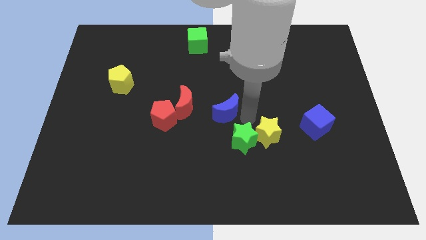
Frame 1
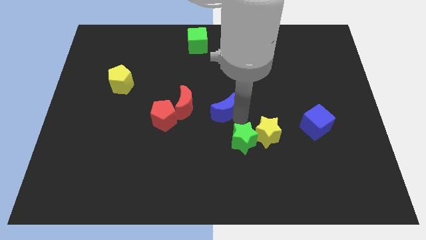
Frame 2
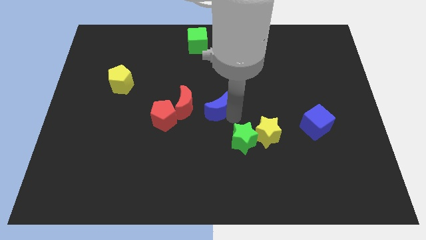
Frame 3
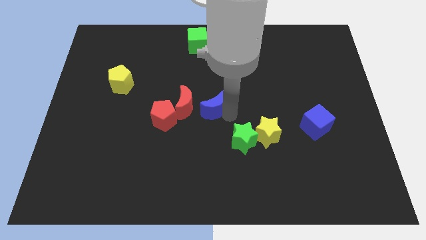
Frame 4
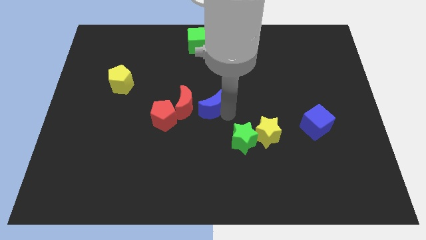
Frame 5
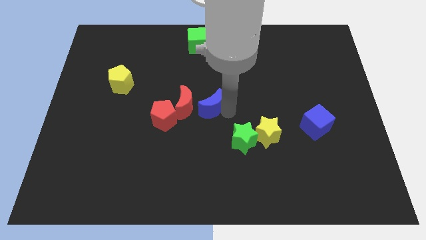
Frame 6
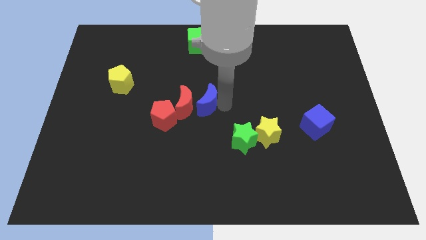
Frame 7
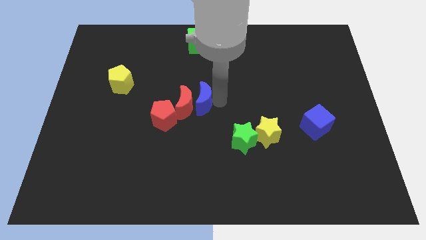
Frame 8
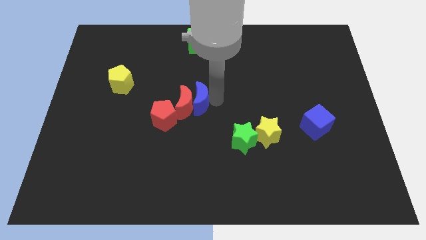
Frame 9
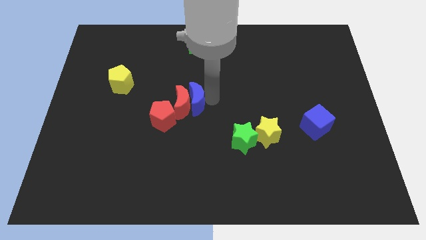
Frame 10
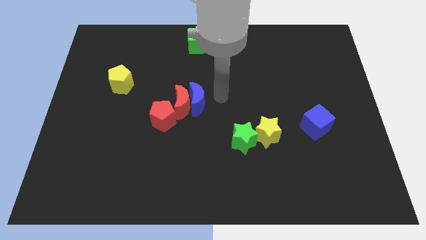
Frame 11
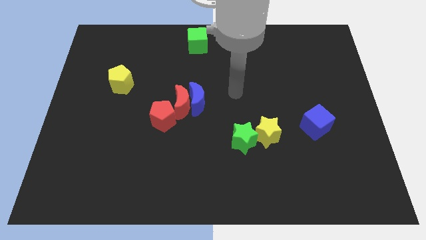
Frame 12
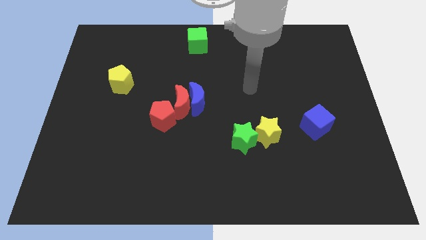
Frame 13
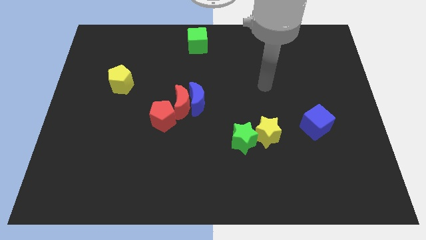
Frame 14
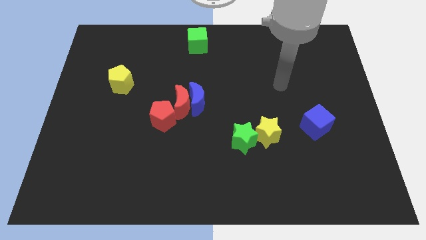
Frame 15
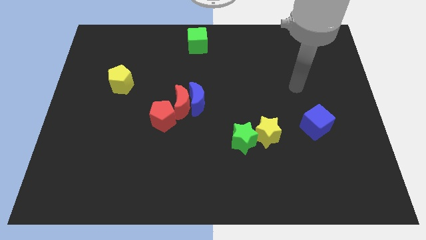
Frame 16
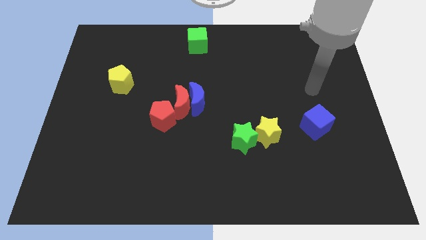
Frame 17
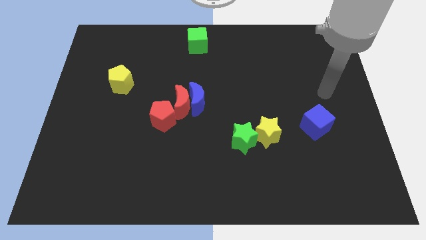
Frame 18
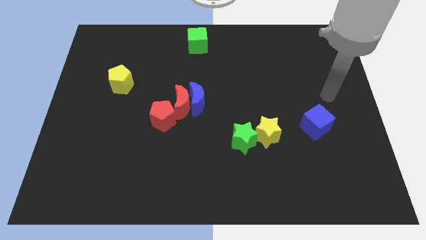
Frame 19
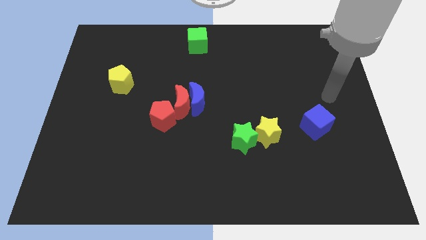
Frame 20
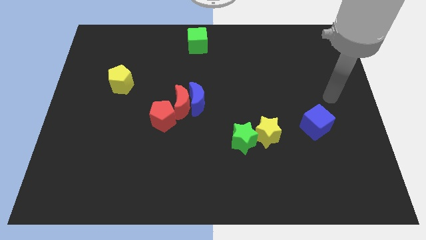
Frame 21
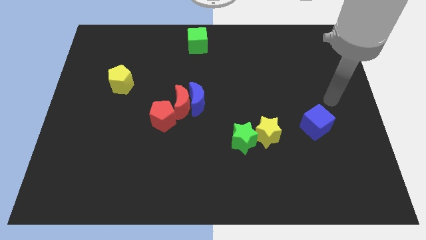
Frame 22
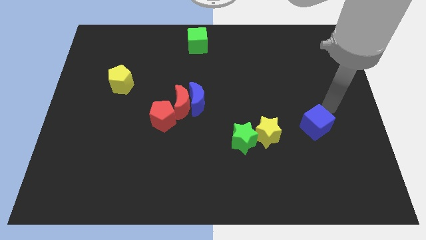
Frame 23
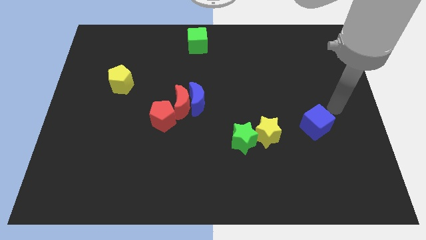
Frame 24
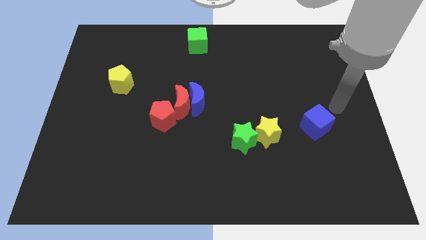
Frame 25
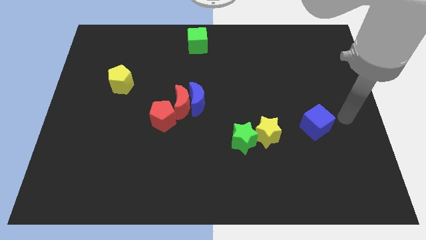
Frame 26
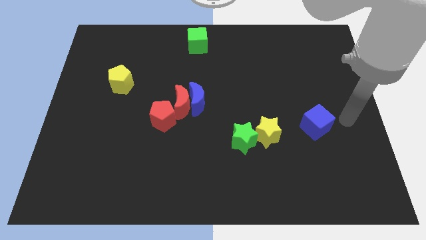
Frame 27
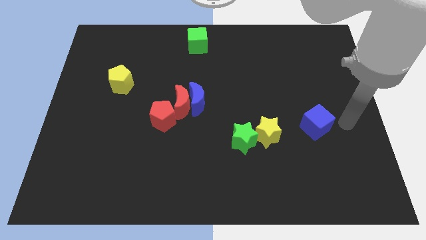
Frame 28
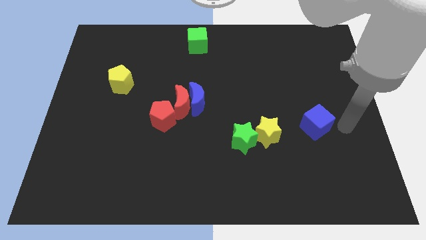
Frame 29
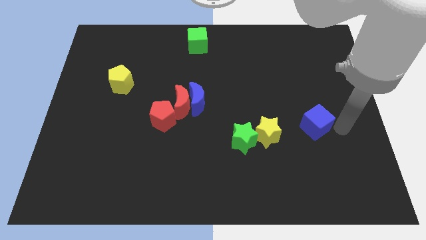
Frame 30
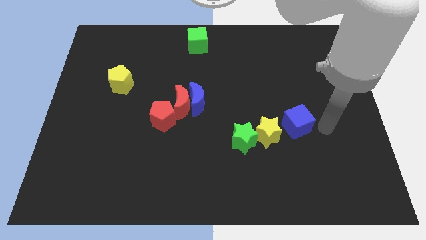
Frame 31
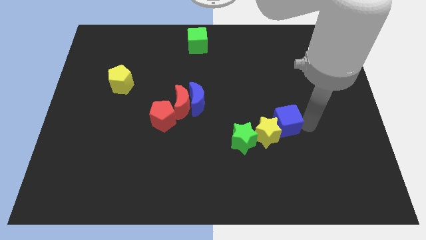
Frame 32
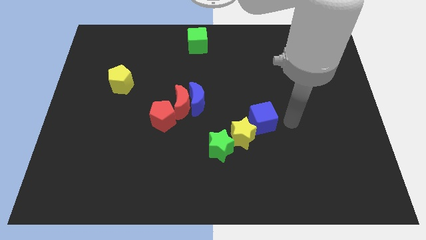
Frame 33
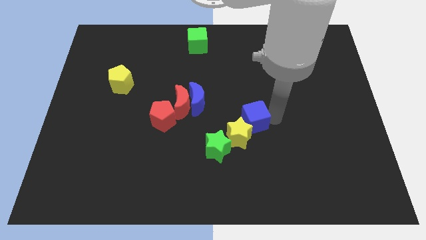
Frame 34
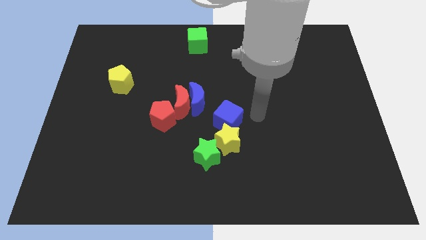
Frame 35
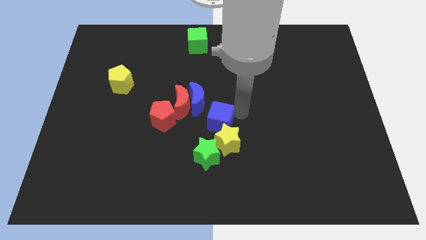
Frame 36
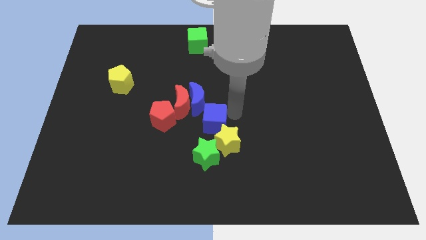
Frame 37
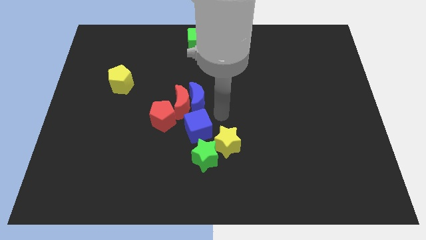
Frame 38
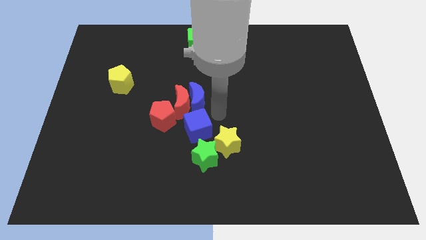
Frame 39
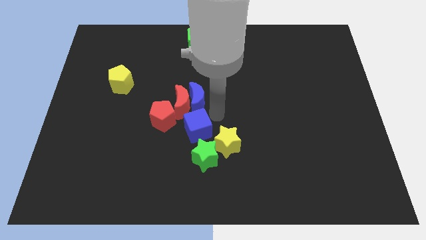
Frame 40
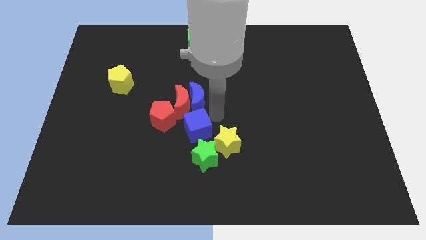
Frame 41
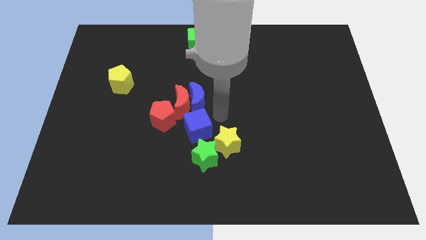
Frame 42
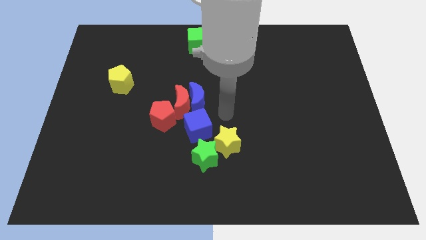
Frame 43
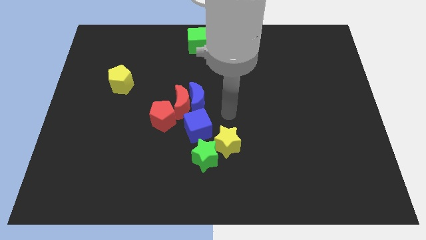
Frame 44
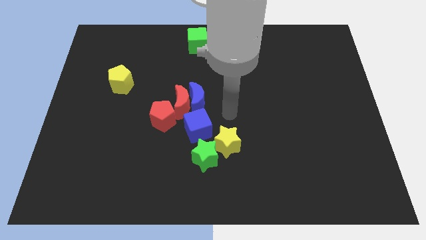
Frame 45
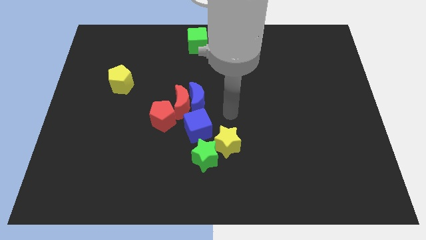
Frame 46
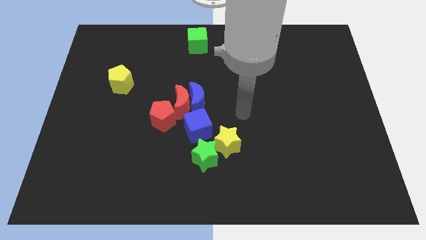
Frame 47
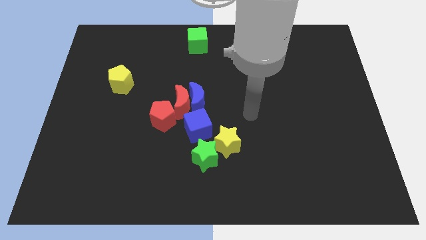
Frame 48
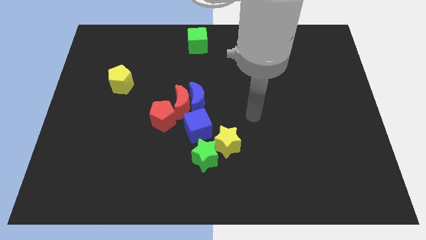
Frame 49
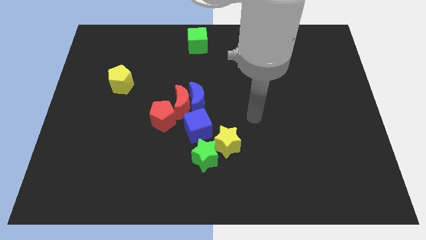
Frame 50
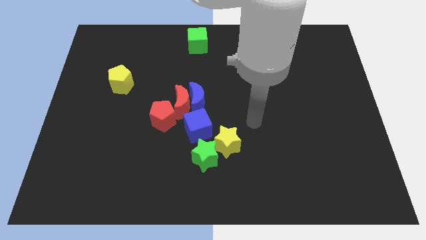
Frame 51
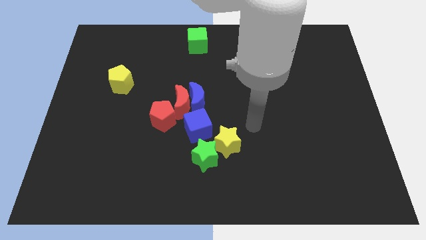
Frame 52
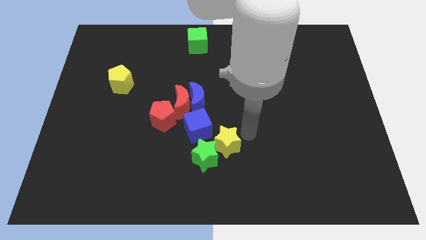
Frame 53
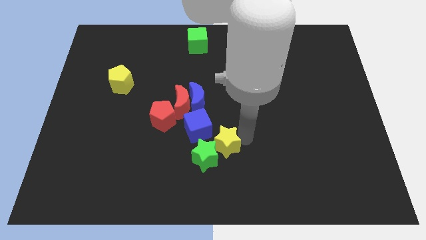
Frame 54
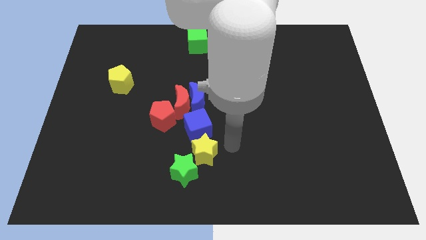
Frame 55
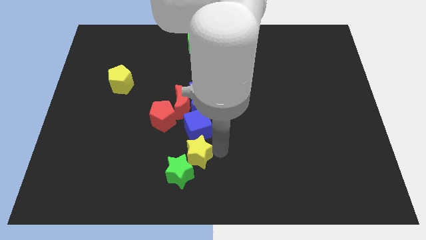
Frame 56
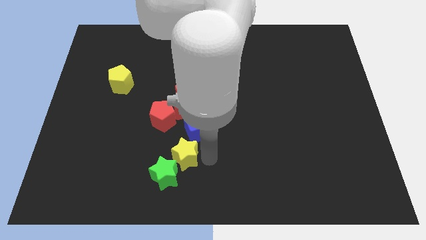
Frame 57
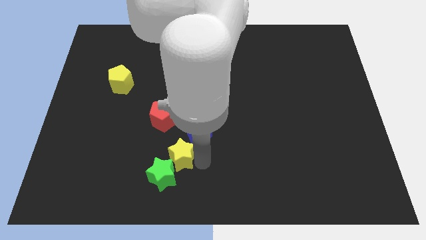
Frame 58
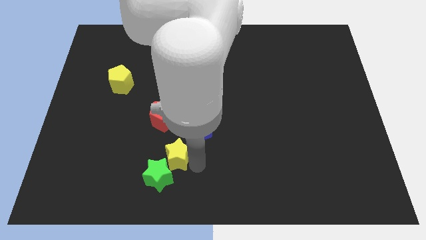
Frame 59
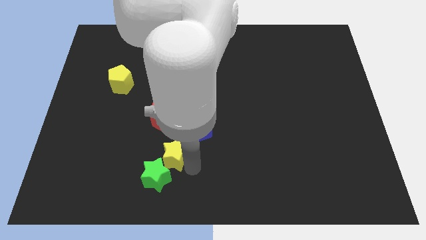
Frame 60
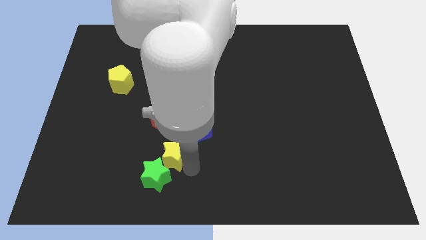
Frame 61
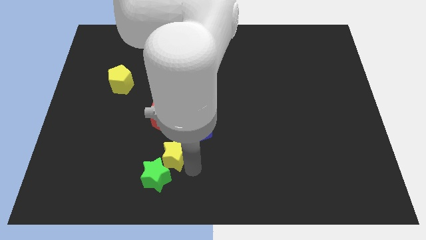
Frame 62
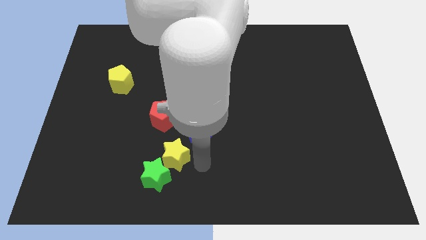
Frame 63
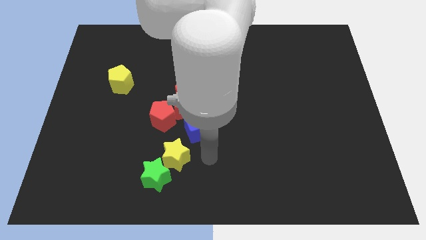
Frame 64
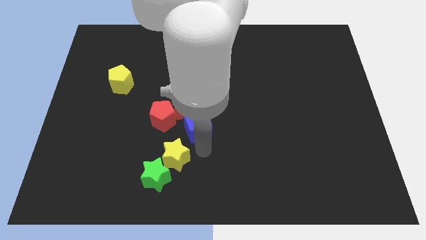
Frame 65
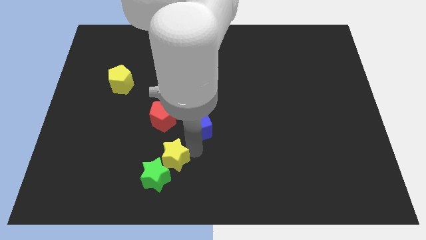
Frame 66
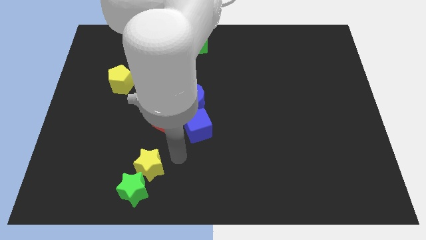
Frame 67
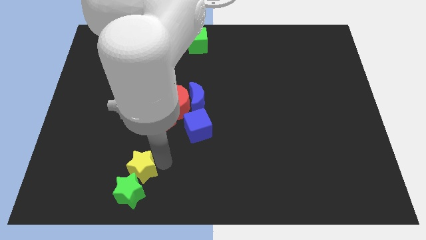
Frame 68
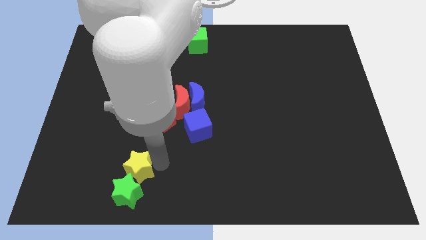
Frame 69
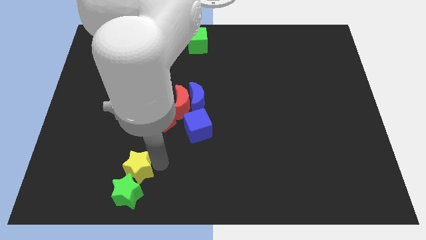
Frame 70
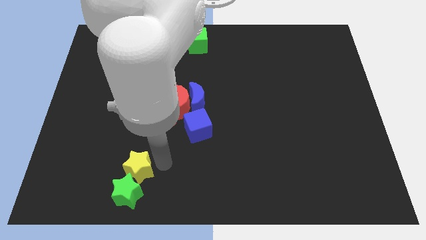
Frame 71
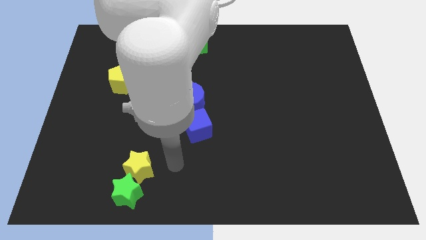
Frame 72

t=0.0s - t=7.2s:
separate stars from the group of blocks

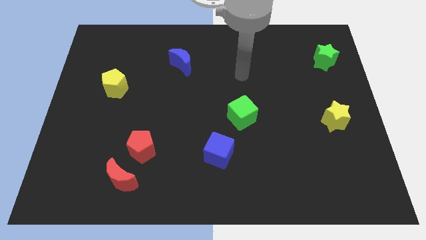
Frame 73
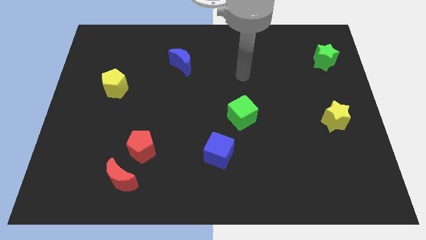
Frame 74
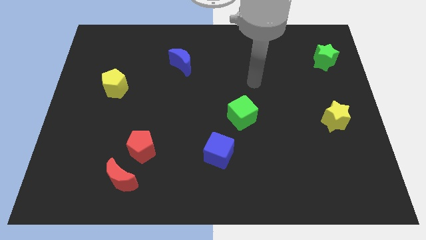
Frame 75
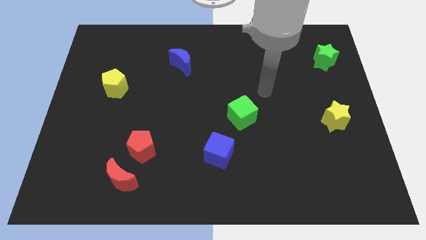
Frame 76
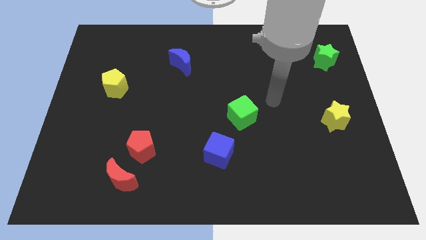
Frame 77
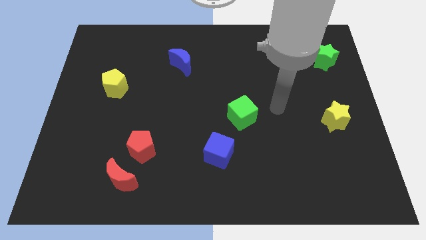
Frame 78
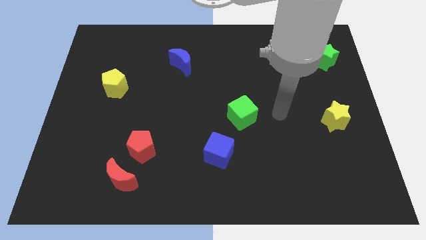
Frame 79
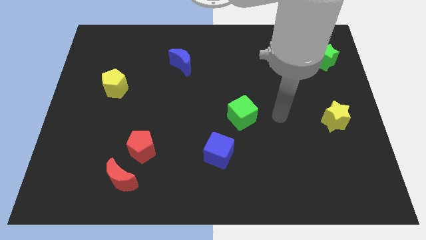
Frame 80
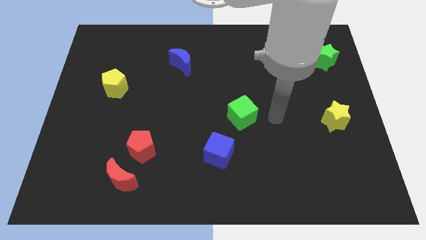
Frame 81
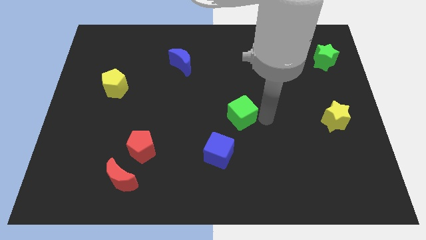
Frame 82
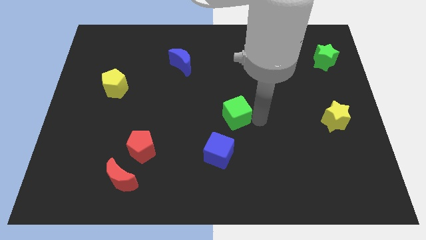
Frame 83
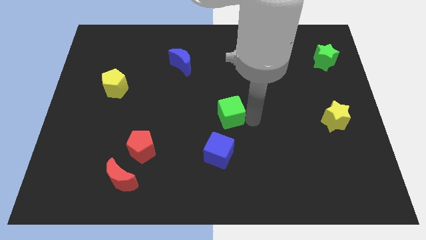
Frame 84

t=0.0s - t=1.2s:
place the arm right to the green cube

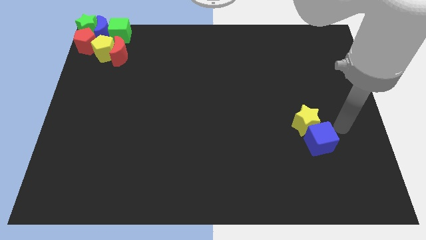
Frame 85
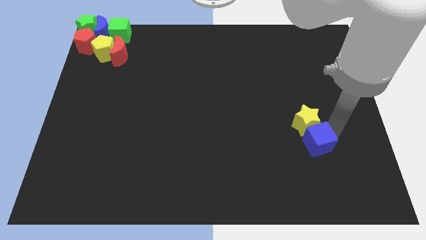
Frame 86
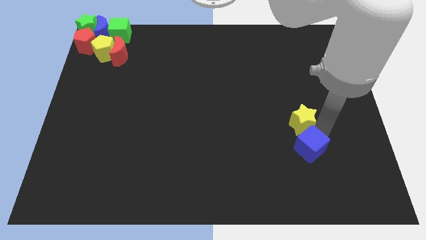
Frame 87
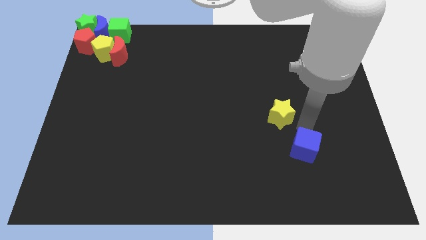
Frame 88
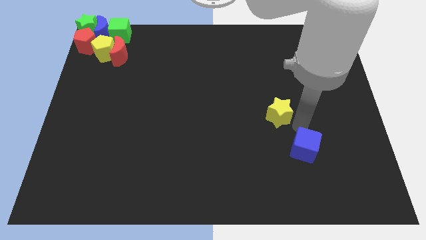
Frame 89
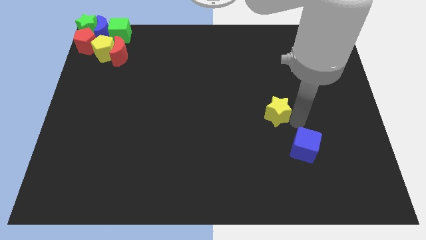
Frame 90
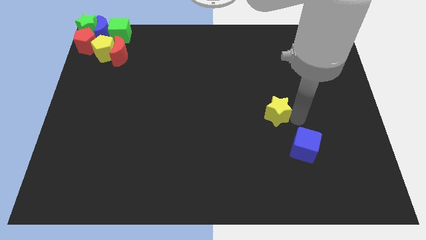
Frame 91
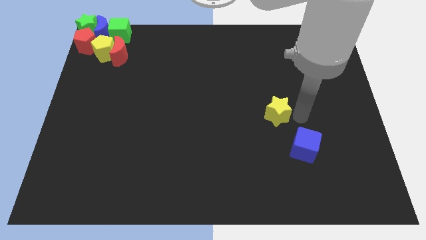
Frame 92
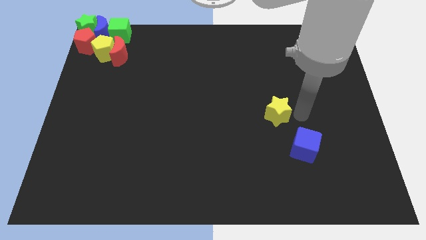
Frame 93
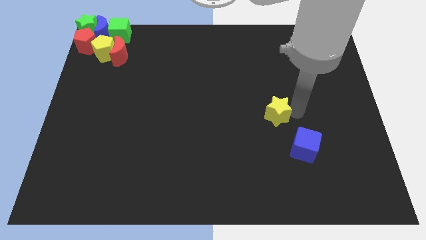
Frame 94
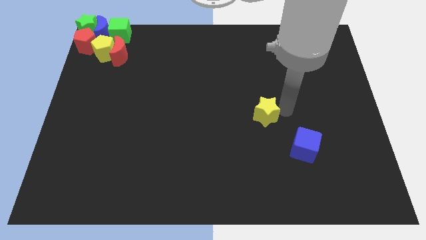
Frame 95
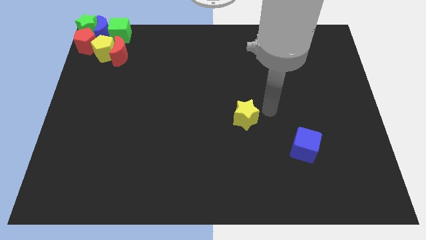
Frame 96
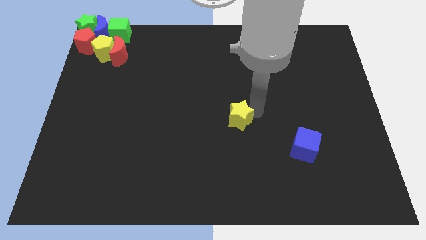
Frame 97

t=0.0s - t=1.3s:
separate the yellow star from the blue cube
